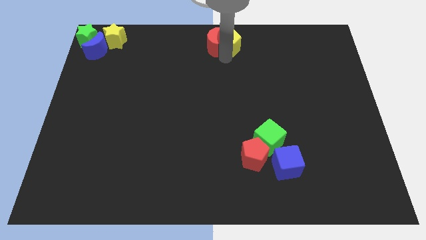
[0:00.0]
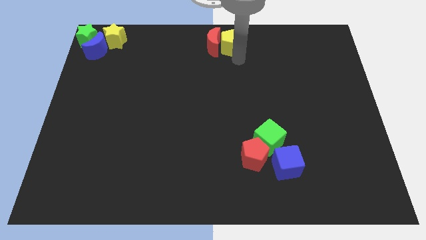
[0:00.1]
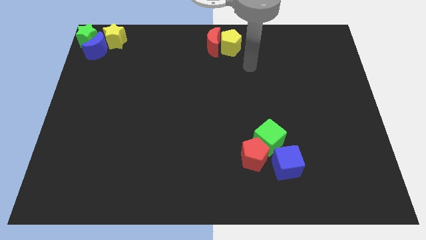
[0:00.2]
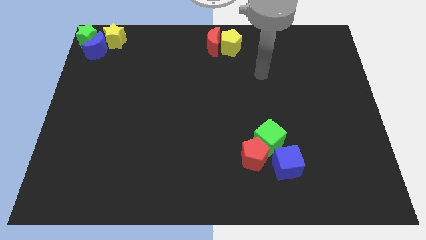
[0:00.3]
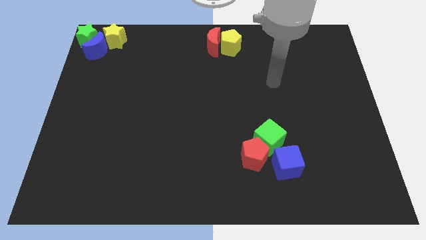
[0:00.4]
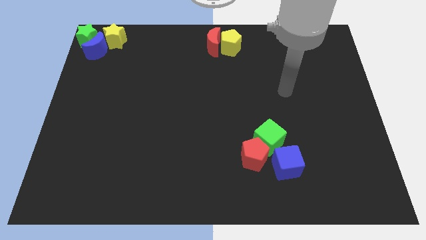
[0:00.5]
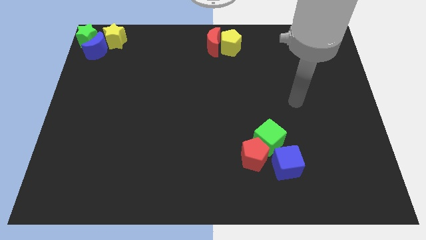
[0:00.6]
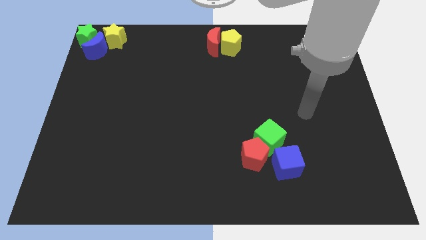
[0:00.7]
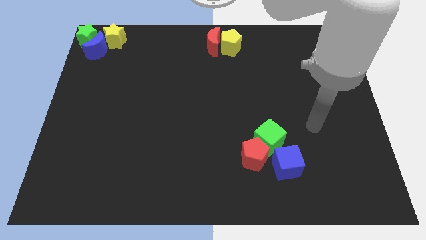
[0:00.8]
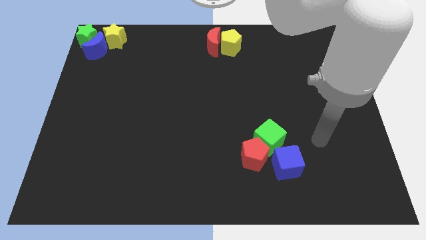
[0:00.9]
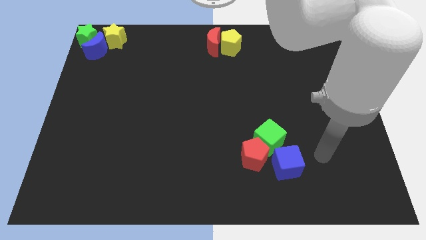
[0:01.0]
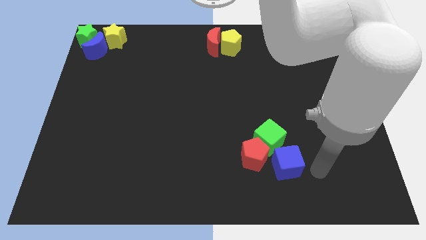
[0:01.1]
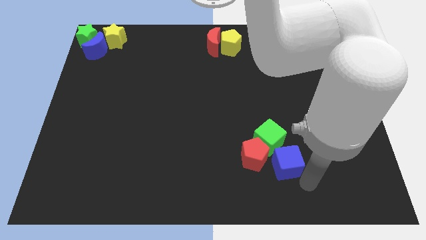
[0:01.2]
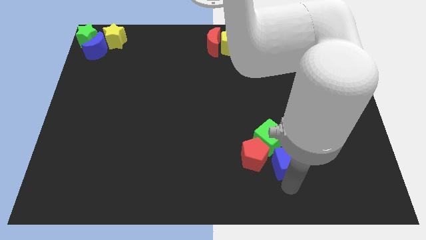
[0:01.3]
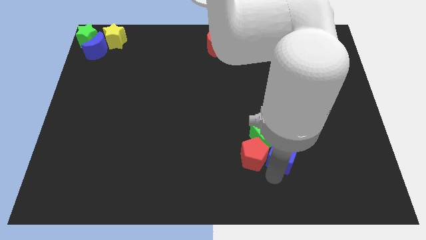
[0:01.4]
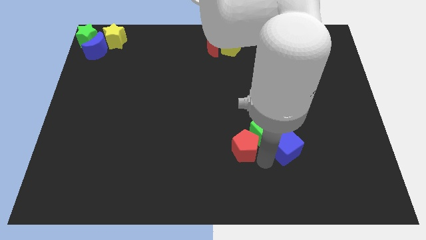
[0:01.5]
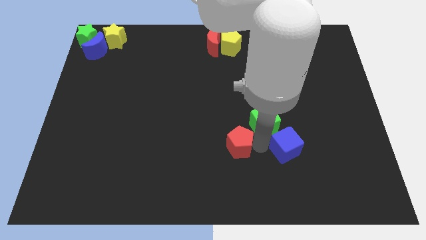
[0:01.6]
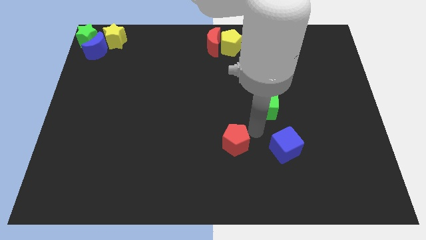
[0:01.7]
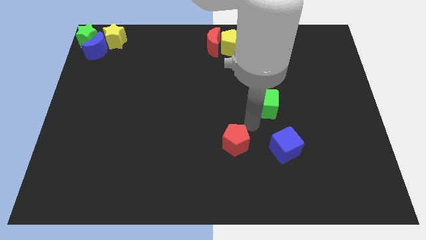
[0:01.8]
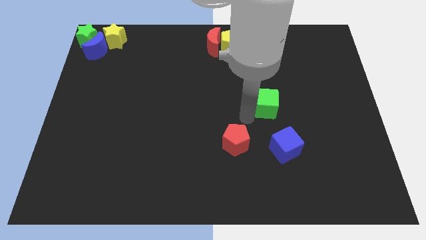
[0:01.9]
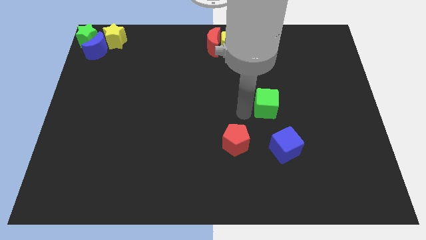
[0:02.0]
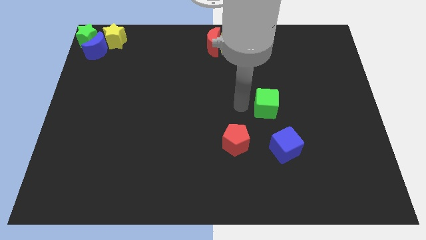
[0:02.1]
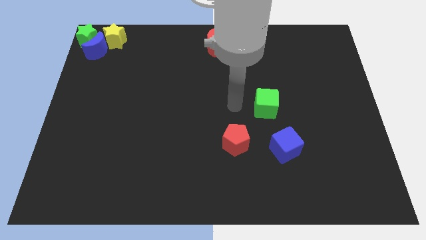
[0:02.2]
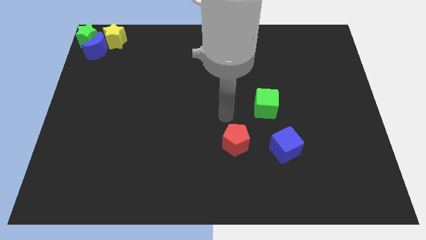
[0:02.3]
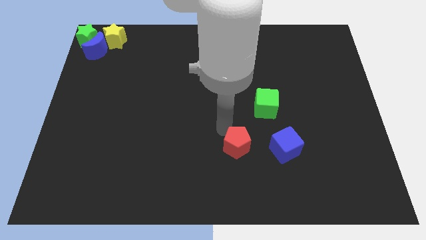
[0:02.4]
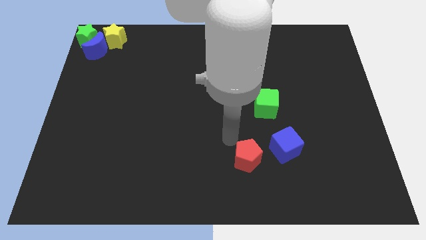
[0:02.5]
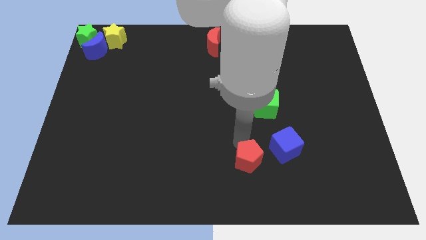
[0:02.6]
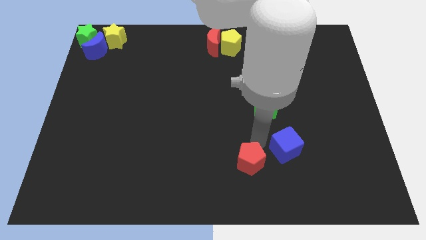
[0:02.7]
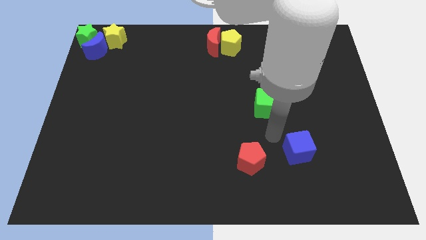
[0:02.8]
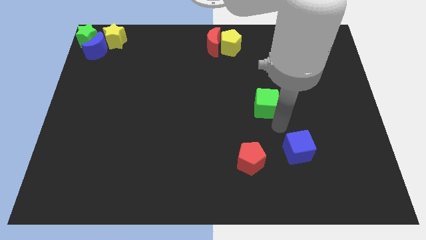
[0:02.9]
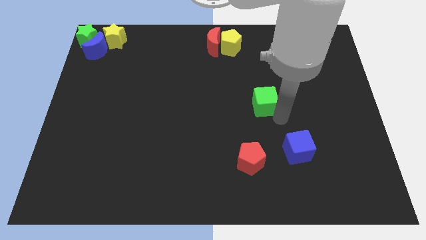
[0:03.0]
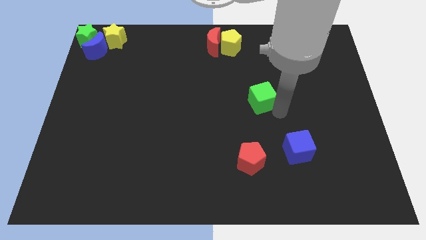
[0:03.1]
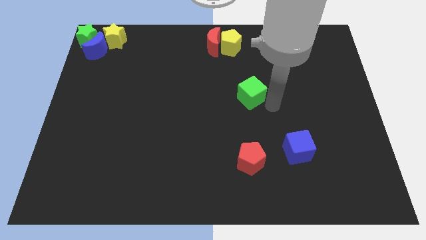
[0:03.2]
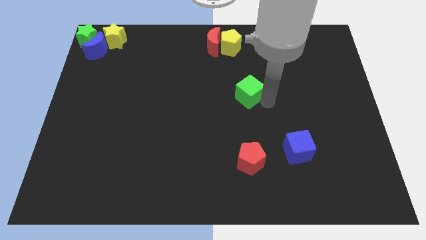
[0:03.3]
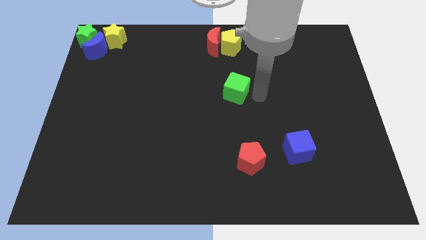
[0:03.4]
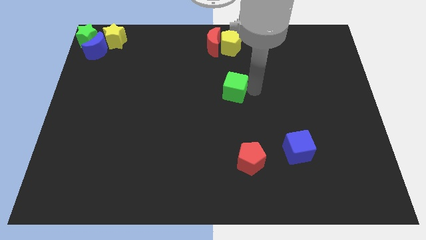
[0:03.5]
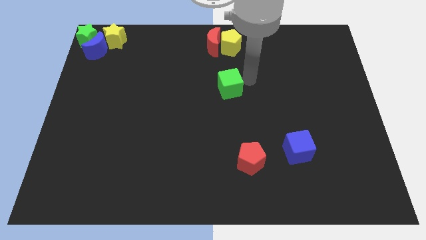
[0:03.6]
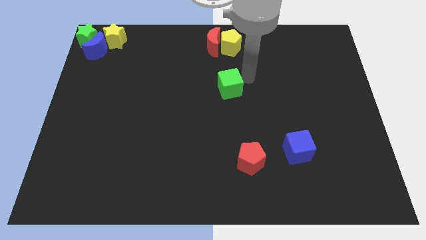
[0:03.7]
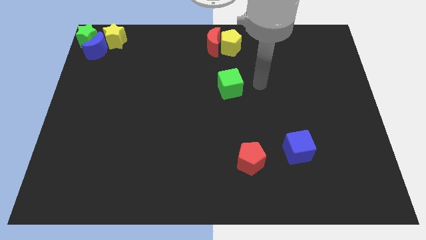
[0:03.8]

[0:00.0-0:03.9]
move the green block apart from the group of blocks

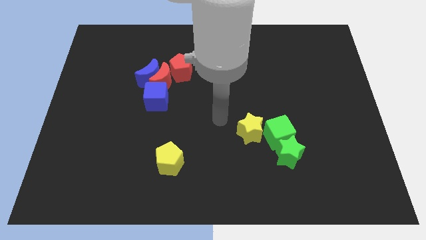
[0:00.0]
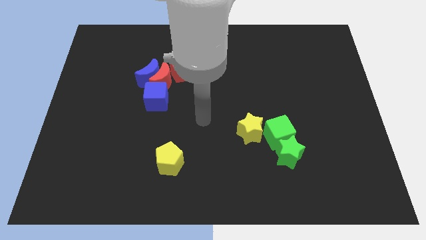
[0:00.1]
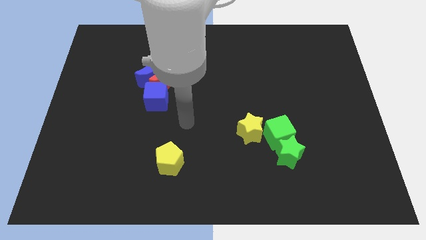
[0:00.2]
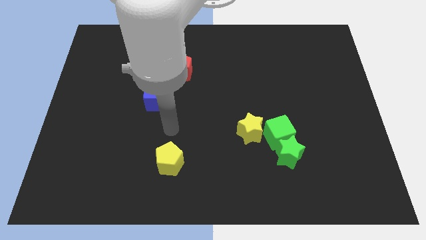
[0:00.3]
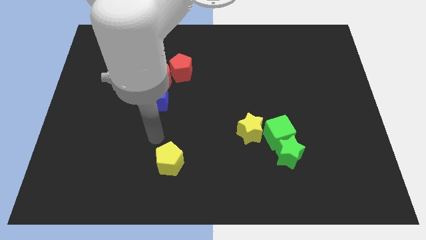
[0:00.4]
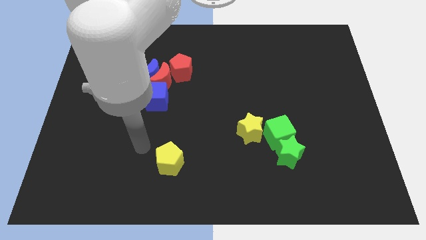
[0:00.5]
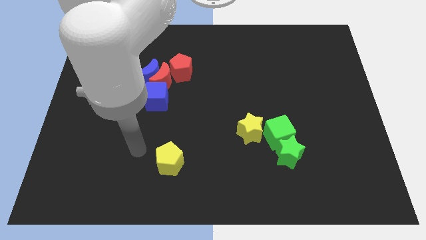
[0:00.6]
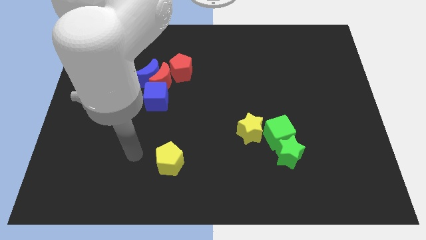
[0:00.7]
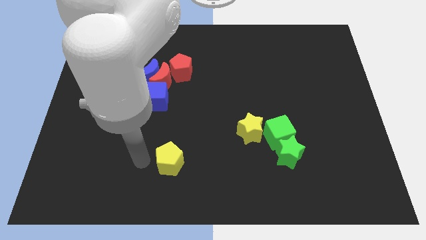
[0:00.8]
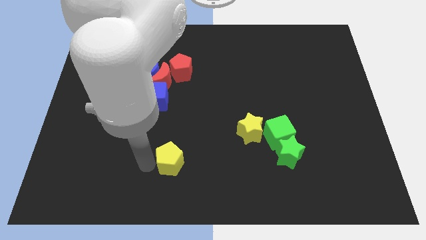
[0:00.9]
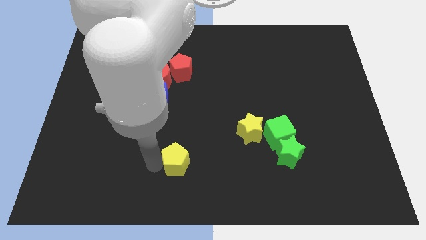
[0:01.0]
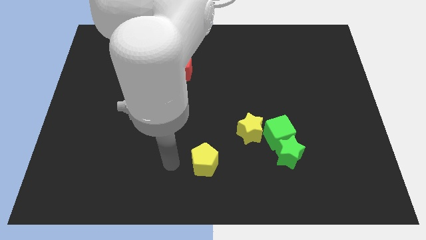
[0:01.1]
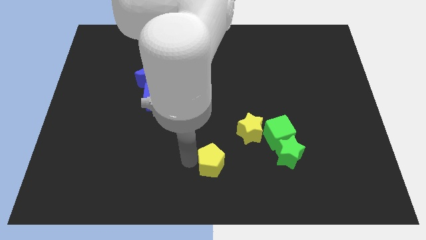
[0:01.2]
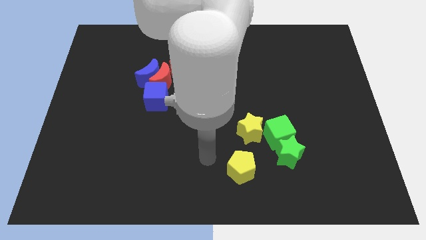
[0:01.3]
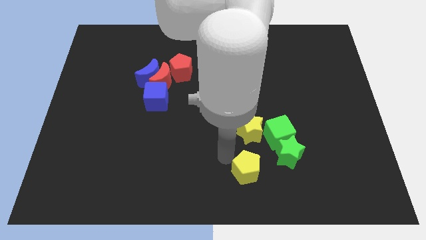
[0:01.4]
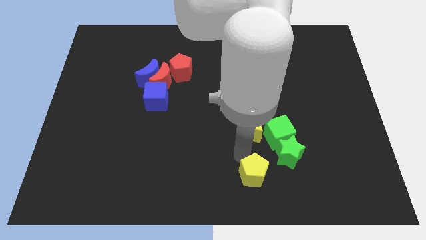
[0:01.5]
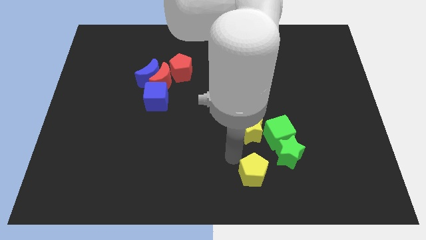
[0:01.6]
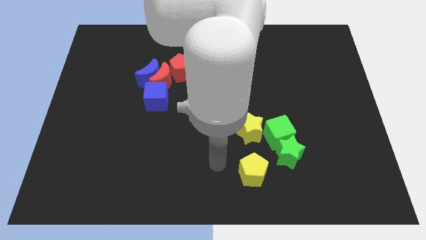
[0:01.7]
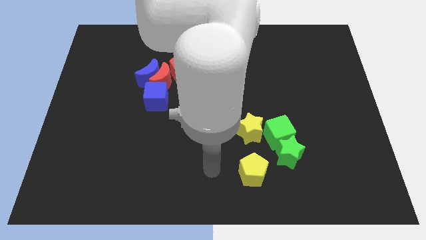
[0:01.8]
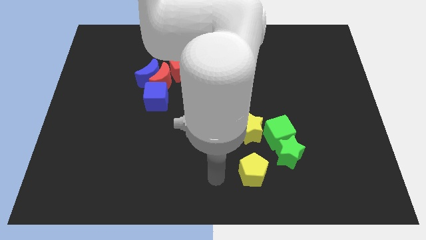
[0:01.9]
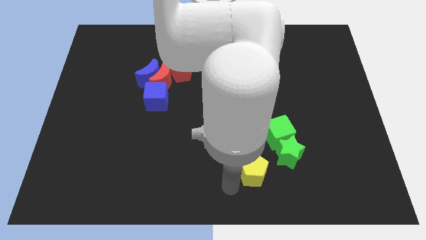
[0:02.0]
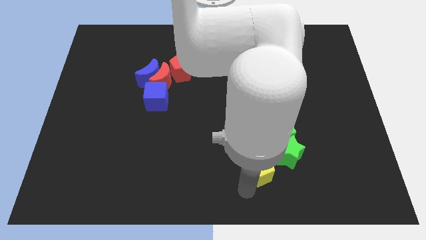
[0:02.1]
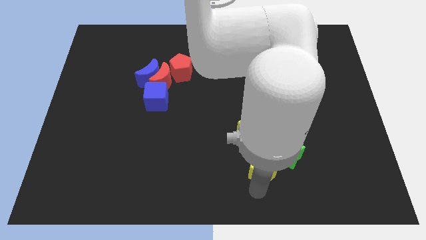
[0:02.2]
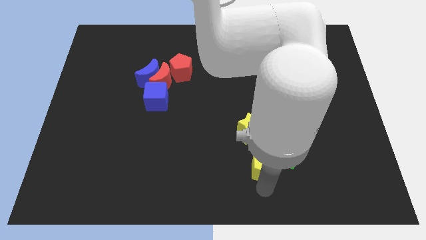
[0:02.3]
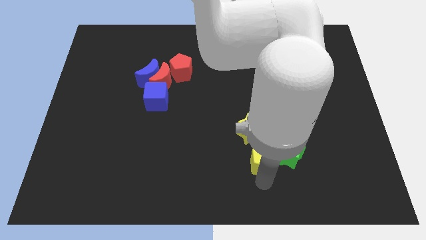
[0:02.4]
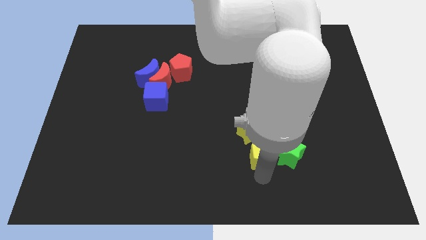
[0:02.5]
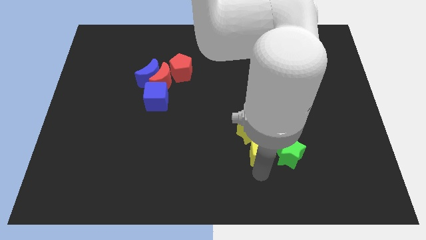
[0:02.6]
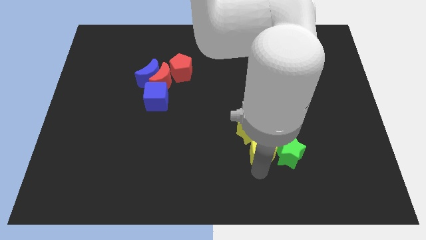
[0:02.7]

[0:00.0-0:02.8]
place the yellow pentagon left to the green star

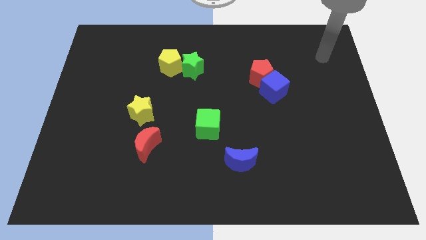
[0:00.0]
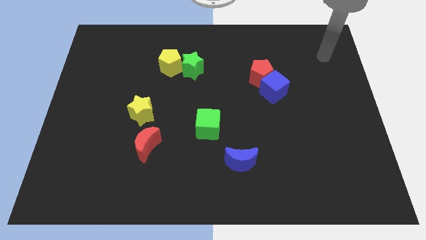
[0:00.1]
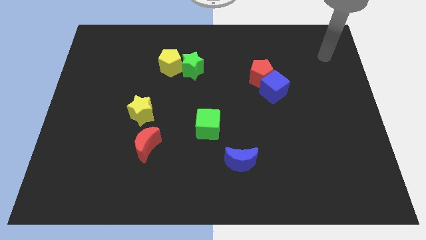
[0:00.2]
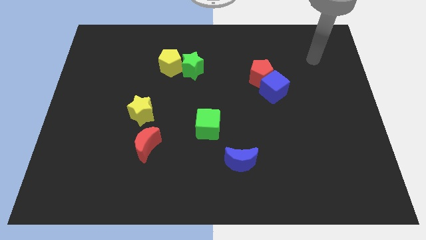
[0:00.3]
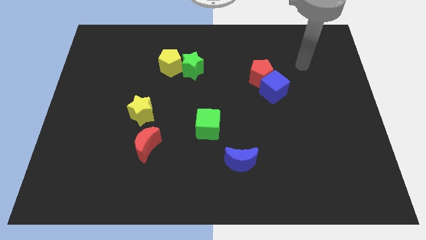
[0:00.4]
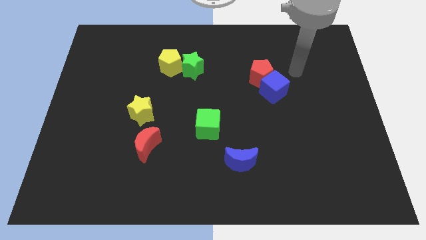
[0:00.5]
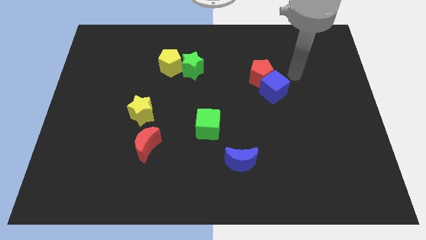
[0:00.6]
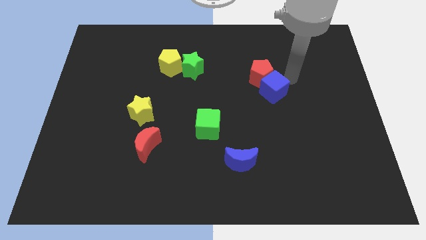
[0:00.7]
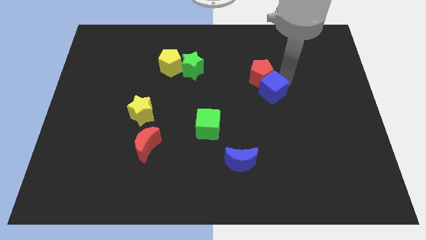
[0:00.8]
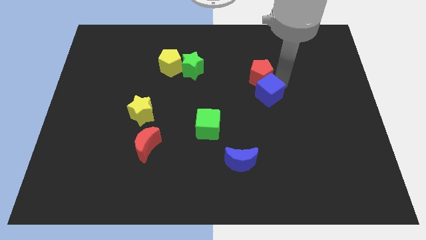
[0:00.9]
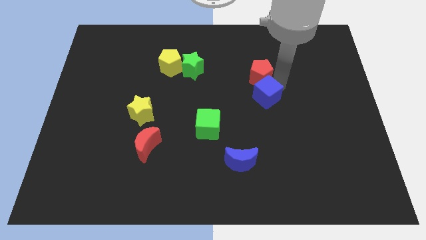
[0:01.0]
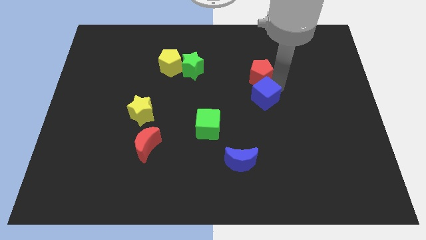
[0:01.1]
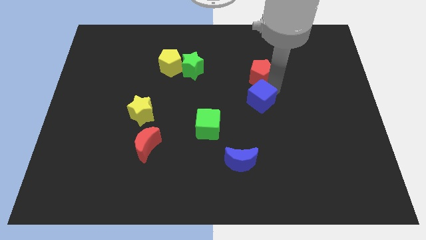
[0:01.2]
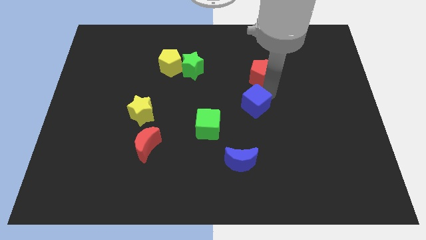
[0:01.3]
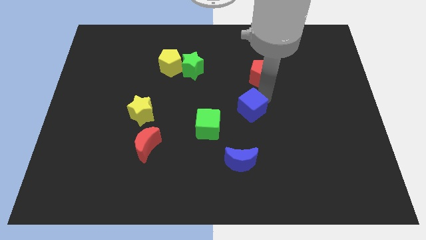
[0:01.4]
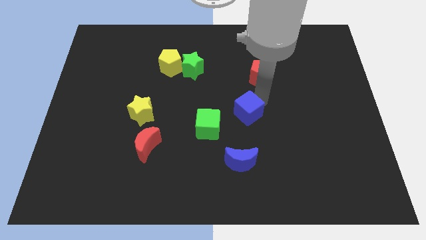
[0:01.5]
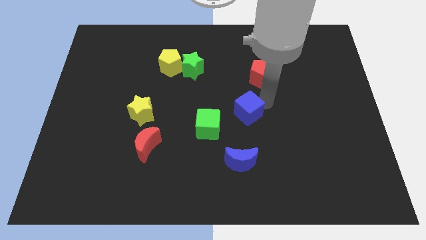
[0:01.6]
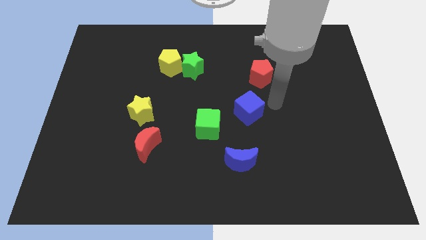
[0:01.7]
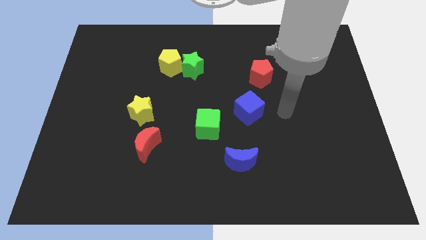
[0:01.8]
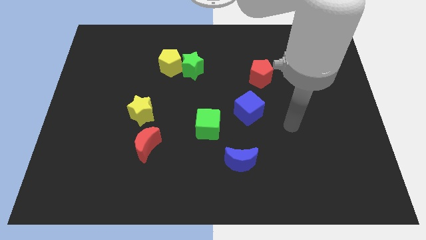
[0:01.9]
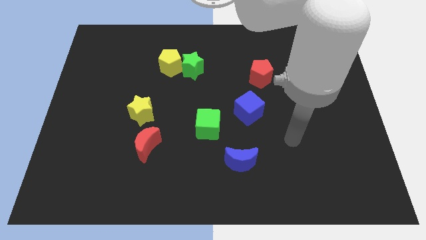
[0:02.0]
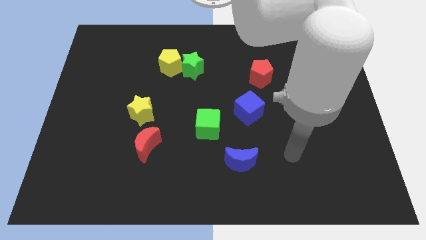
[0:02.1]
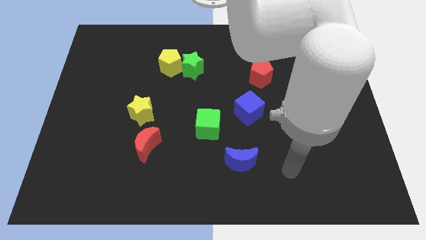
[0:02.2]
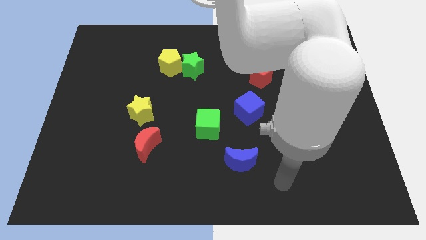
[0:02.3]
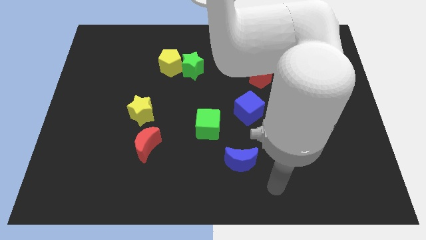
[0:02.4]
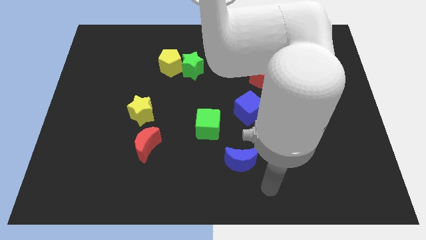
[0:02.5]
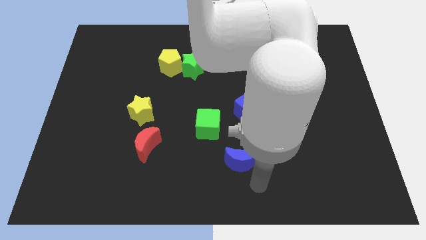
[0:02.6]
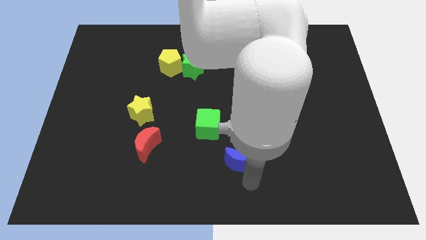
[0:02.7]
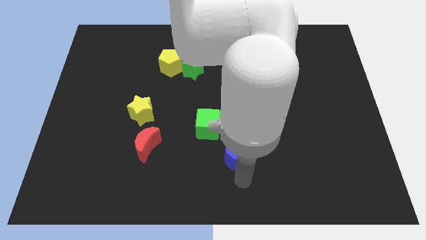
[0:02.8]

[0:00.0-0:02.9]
move the blue cube diagonally right to the green cube
